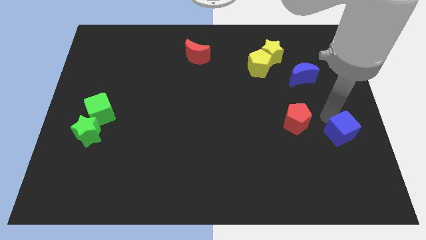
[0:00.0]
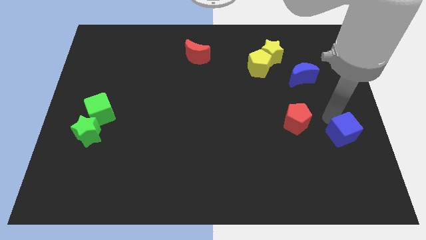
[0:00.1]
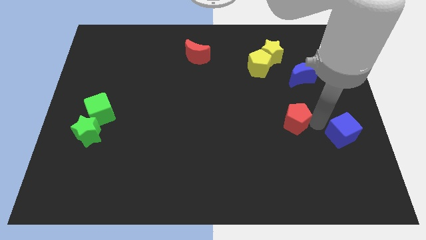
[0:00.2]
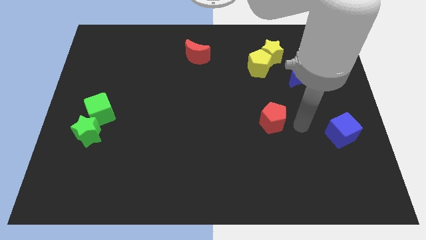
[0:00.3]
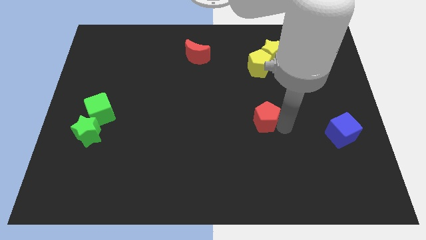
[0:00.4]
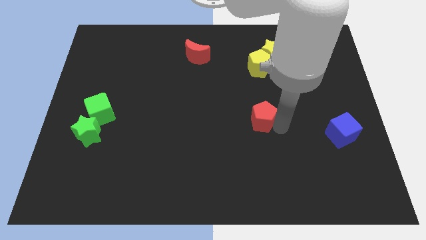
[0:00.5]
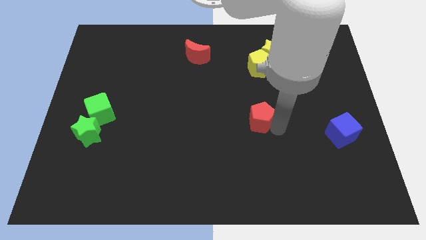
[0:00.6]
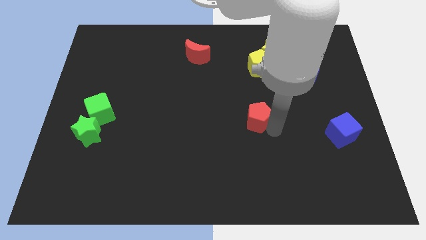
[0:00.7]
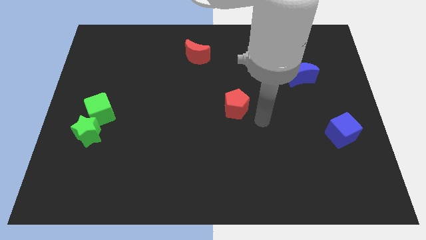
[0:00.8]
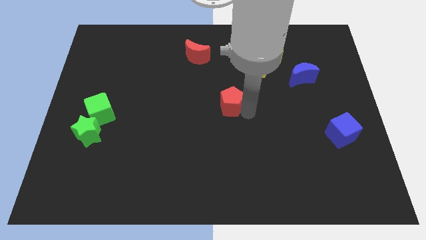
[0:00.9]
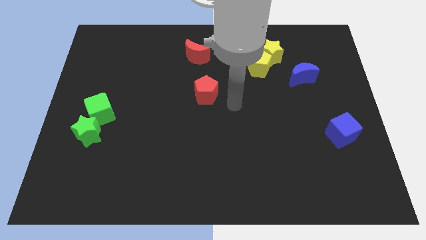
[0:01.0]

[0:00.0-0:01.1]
drag the red pentagon slightly up

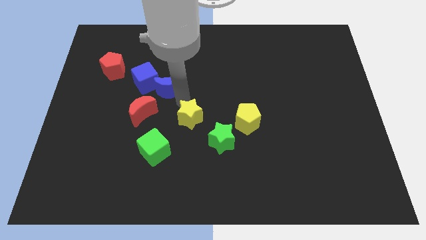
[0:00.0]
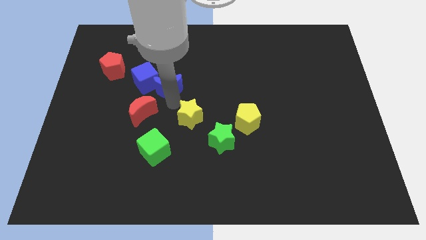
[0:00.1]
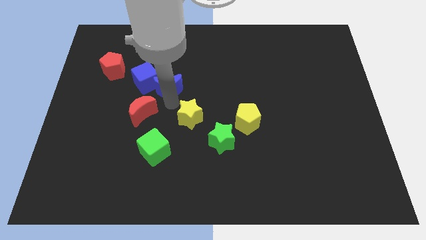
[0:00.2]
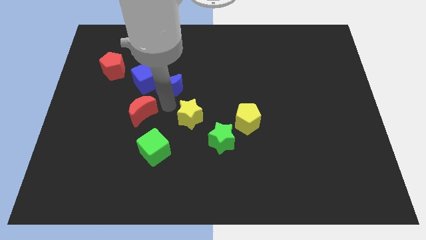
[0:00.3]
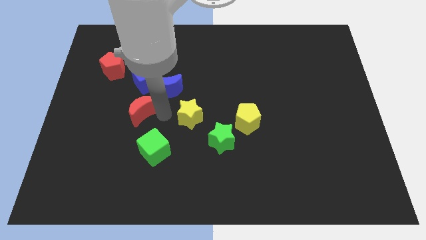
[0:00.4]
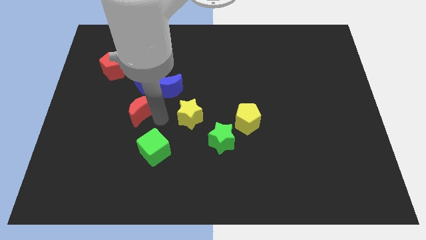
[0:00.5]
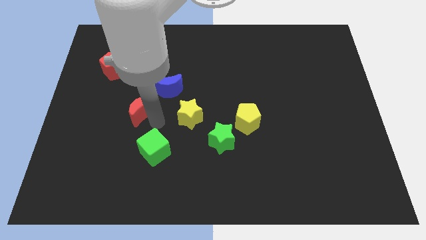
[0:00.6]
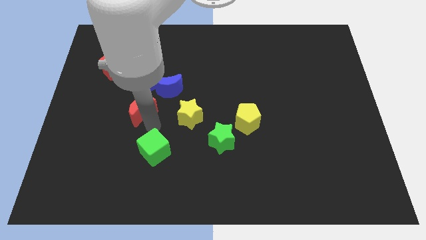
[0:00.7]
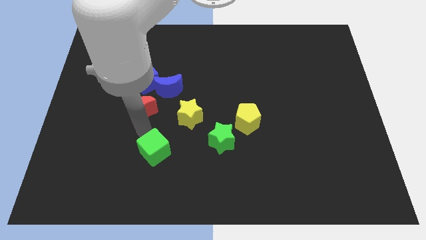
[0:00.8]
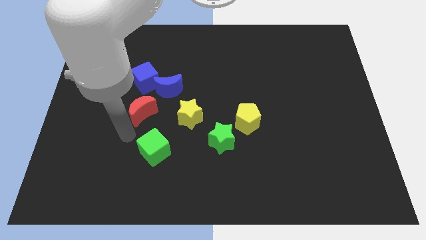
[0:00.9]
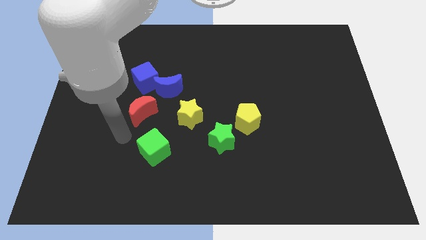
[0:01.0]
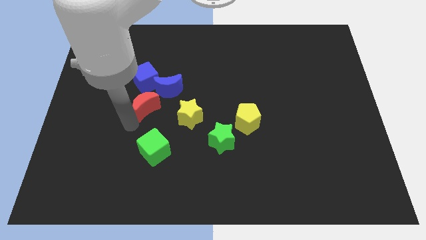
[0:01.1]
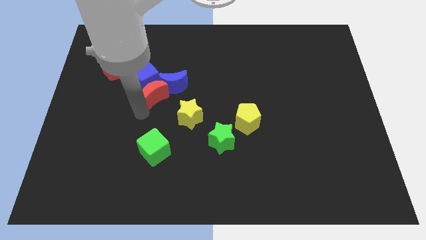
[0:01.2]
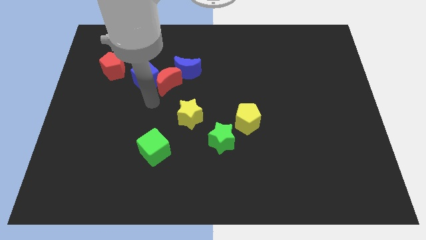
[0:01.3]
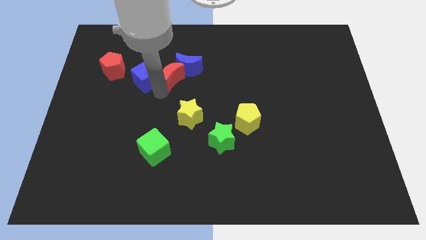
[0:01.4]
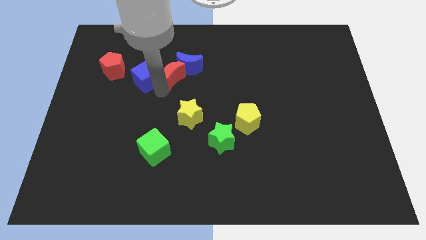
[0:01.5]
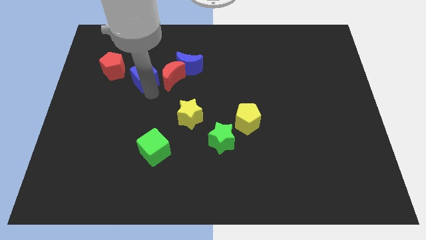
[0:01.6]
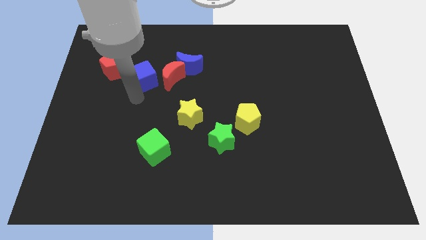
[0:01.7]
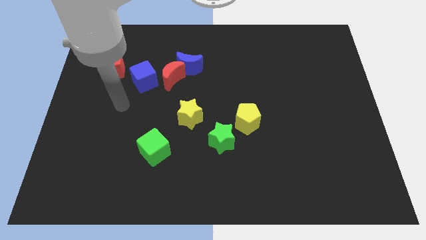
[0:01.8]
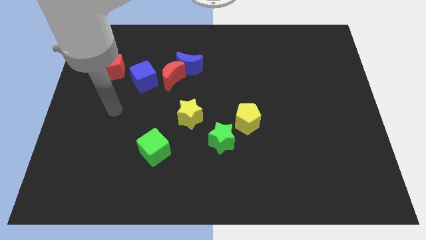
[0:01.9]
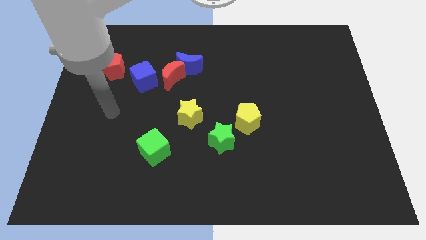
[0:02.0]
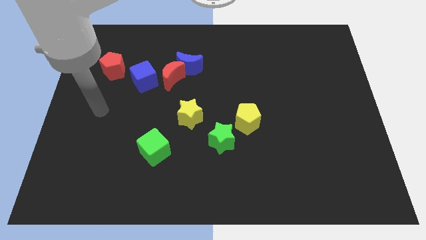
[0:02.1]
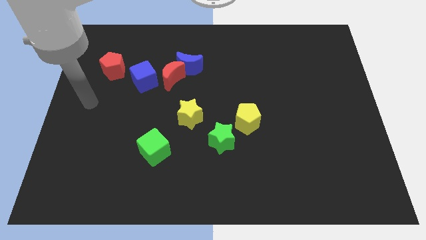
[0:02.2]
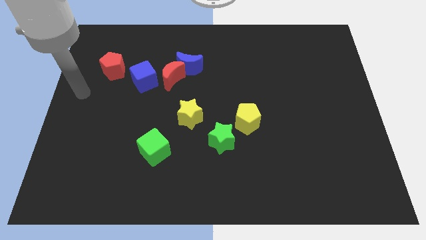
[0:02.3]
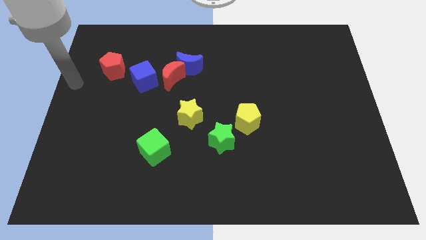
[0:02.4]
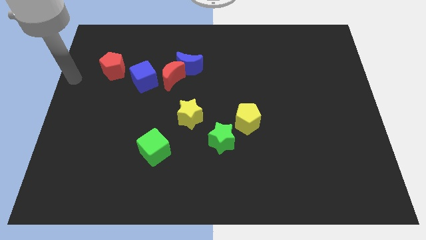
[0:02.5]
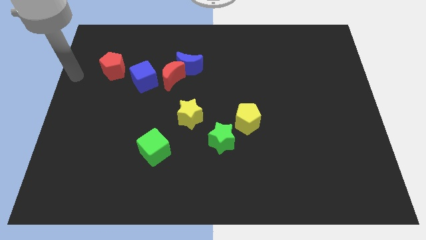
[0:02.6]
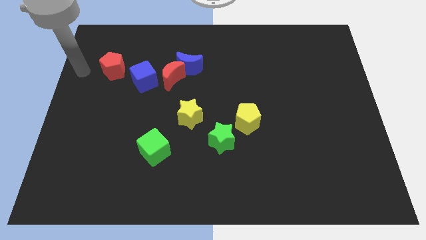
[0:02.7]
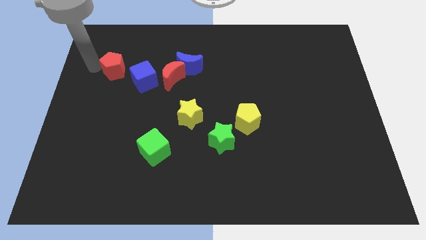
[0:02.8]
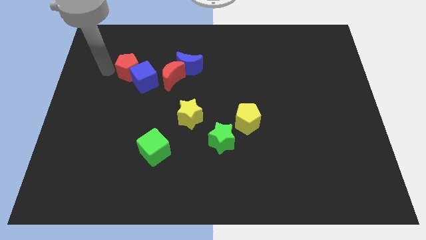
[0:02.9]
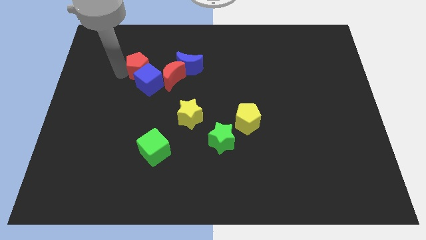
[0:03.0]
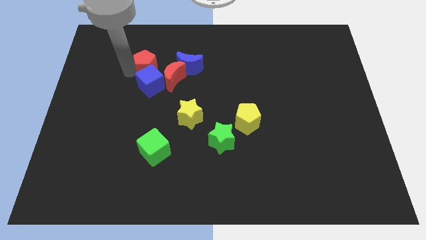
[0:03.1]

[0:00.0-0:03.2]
place the red pentagon above the blue cube

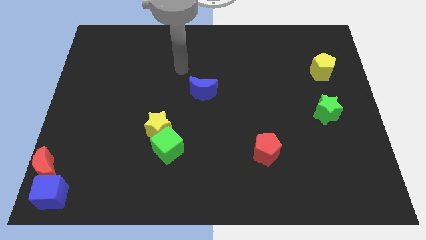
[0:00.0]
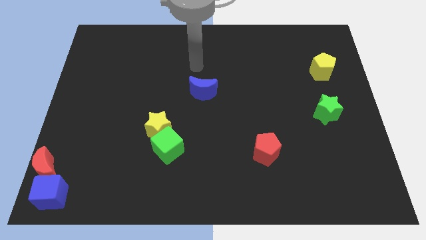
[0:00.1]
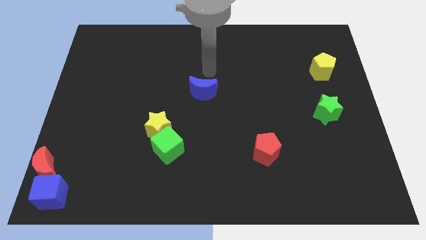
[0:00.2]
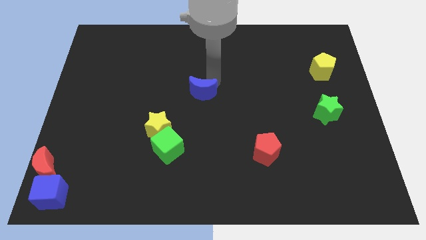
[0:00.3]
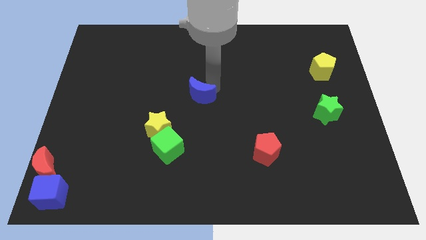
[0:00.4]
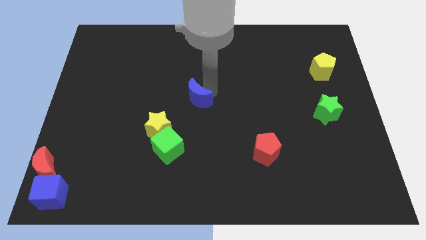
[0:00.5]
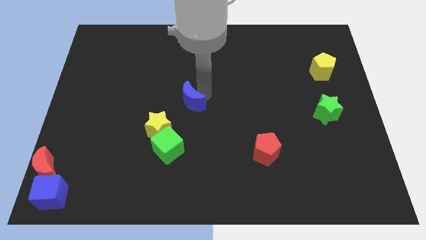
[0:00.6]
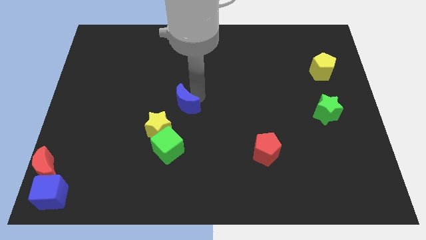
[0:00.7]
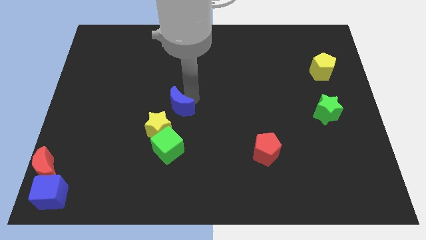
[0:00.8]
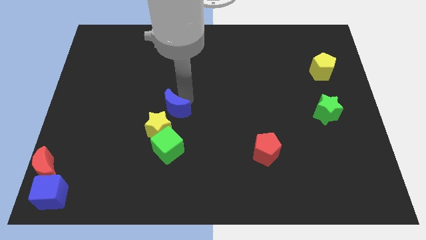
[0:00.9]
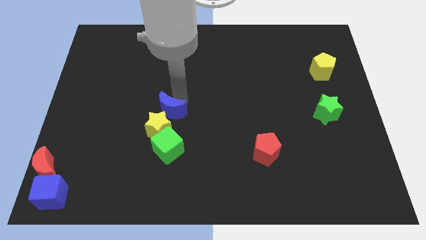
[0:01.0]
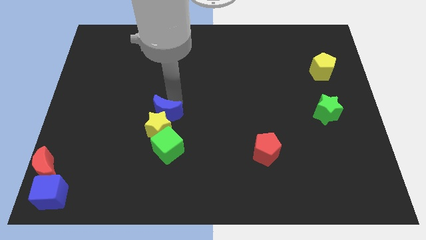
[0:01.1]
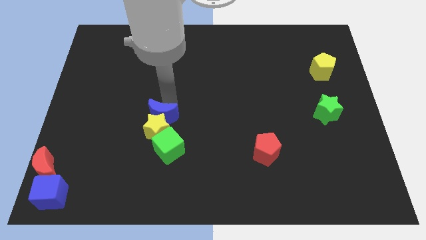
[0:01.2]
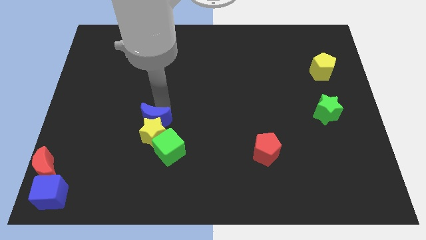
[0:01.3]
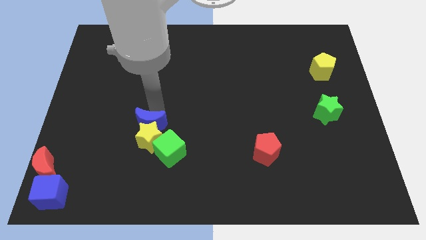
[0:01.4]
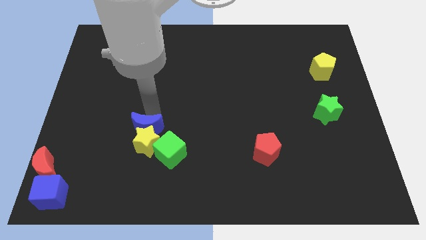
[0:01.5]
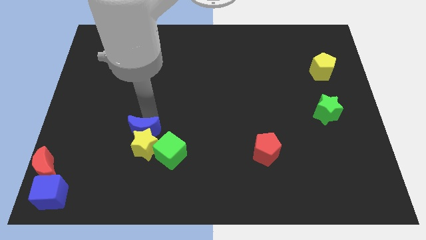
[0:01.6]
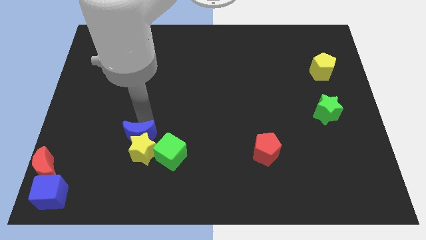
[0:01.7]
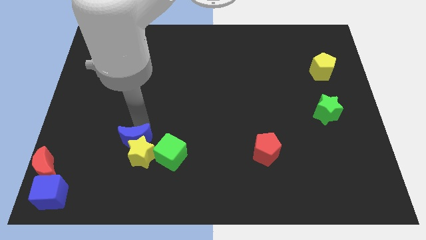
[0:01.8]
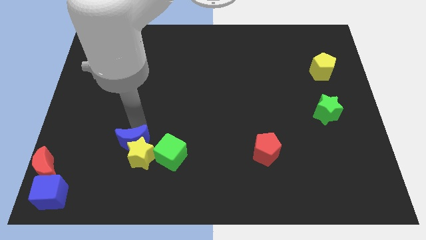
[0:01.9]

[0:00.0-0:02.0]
push blue moon into the yellow star

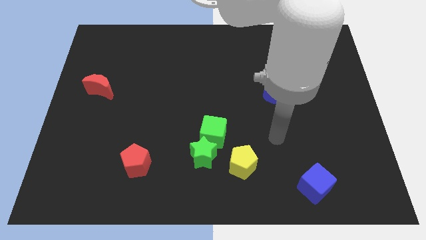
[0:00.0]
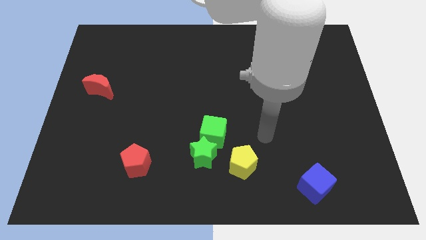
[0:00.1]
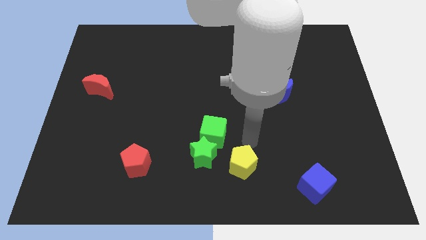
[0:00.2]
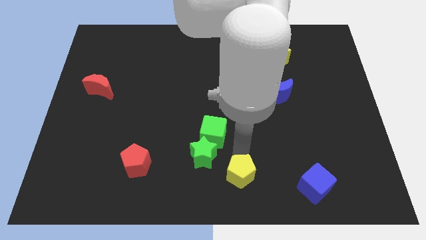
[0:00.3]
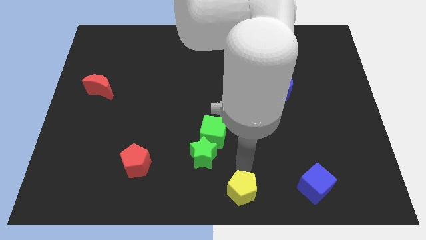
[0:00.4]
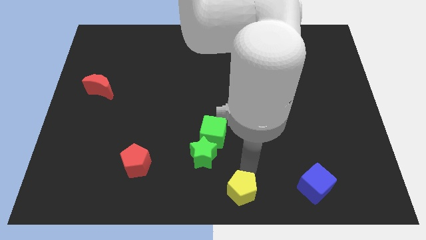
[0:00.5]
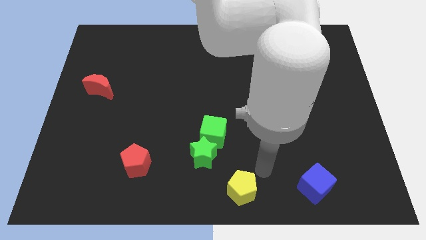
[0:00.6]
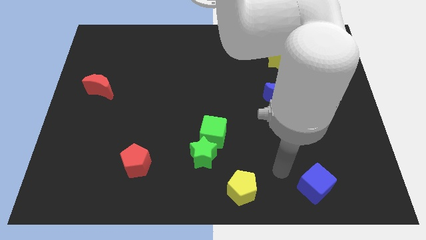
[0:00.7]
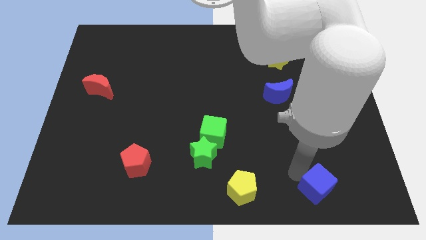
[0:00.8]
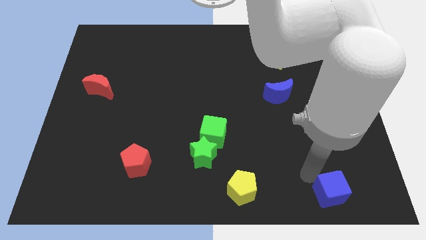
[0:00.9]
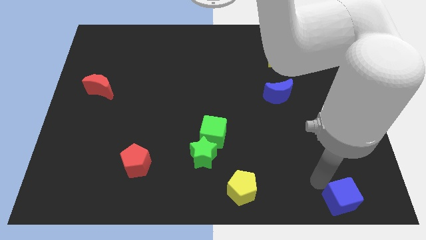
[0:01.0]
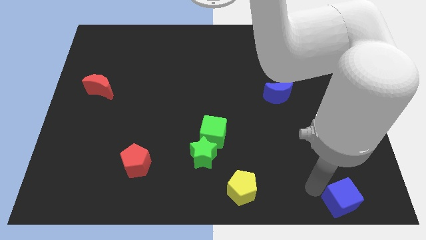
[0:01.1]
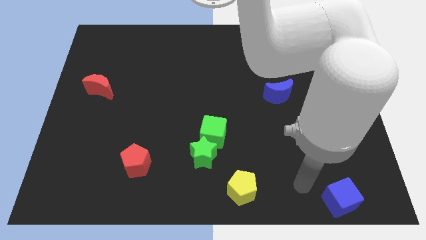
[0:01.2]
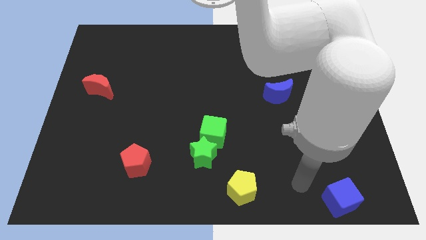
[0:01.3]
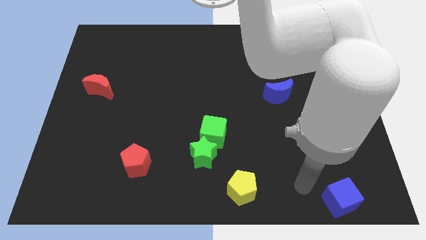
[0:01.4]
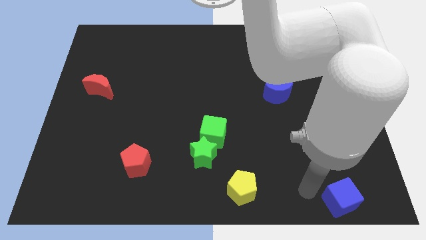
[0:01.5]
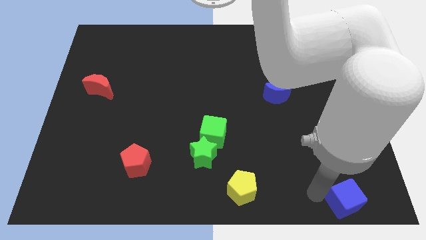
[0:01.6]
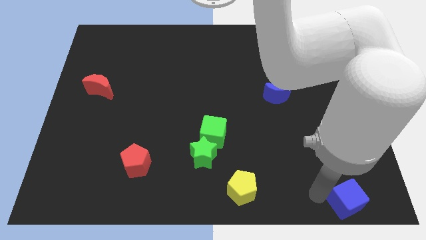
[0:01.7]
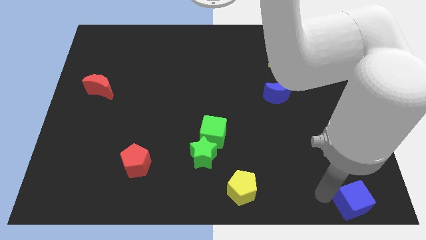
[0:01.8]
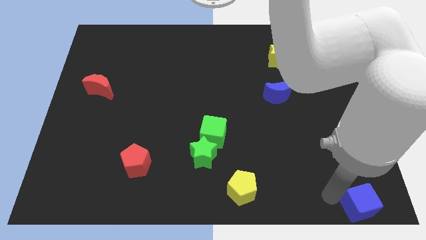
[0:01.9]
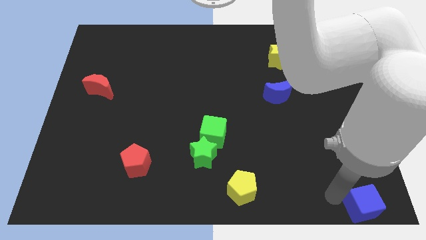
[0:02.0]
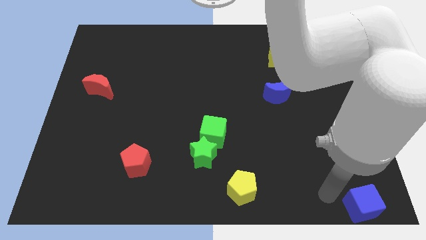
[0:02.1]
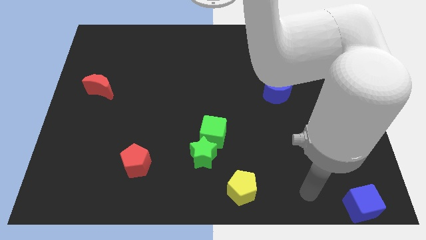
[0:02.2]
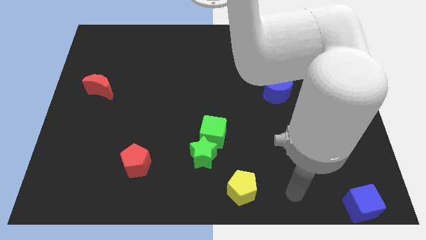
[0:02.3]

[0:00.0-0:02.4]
push the blue cube to the bottom right

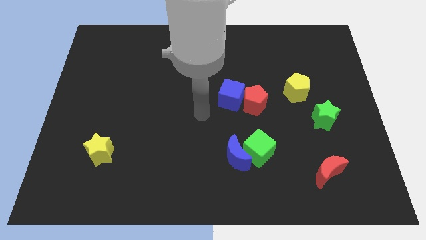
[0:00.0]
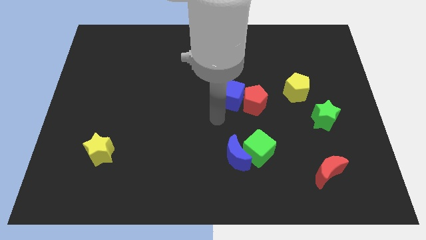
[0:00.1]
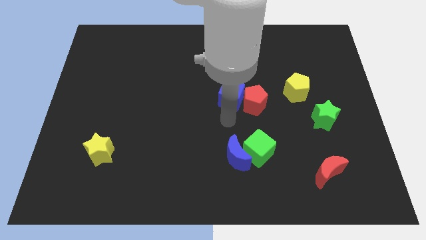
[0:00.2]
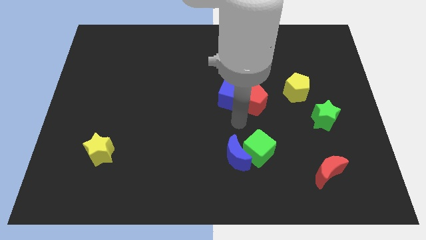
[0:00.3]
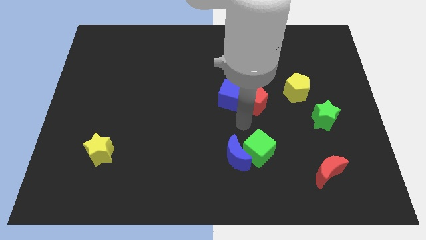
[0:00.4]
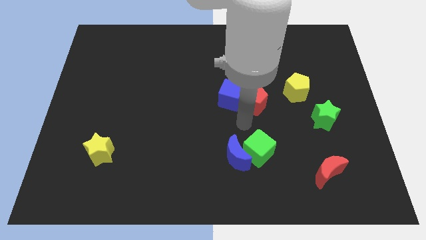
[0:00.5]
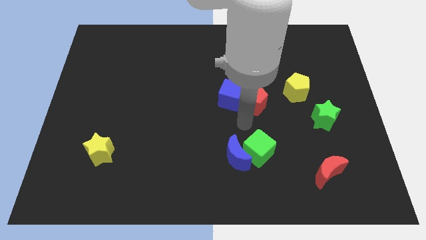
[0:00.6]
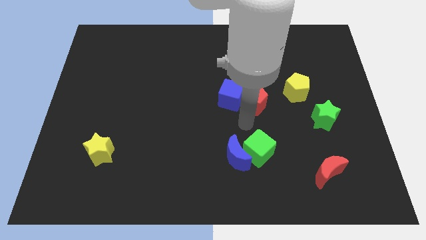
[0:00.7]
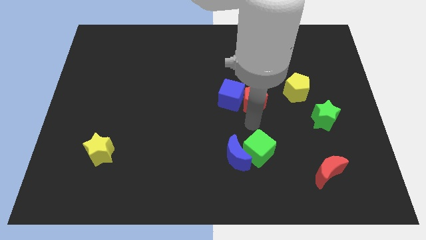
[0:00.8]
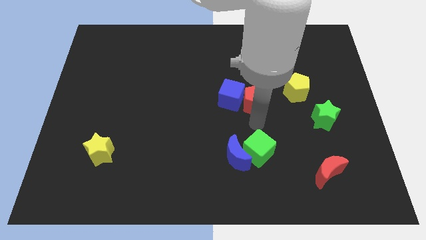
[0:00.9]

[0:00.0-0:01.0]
push arm in between red pentagon and green cube
